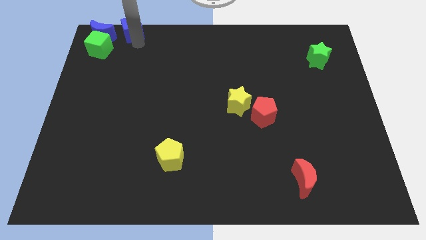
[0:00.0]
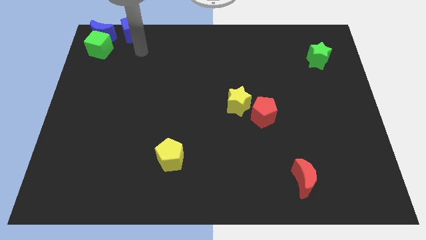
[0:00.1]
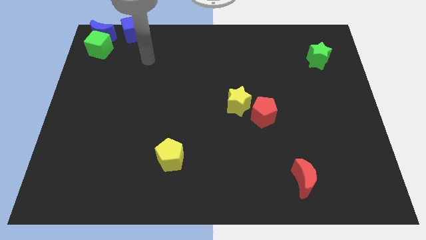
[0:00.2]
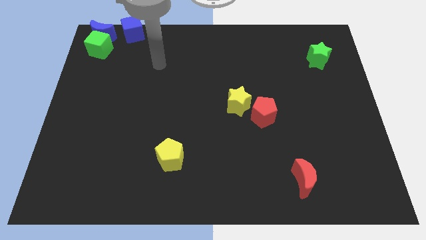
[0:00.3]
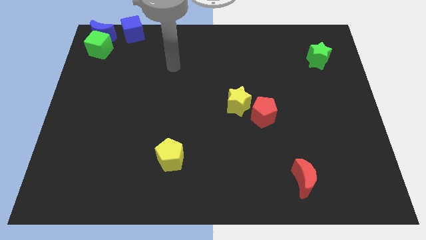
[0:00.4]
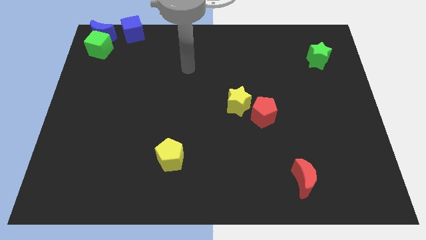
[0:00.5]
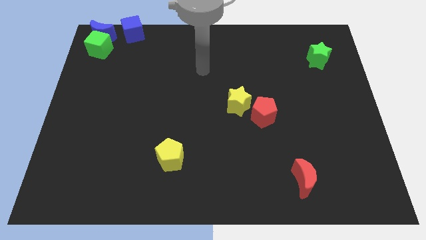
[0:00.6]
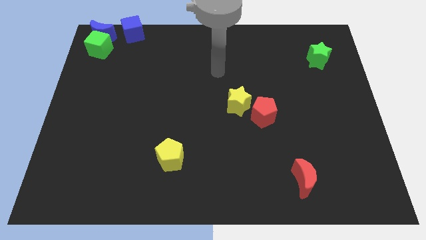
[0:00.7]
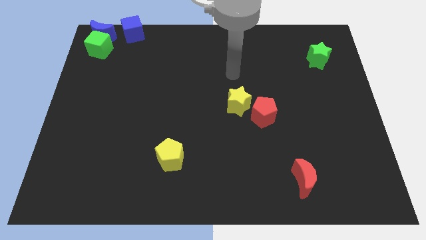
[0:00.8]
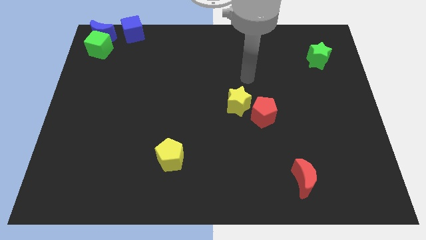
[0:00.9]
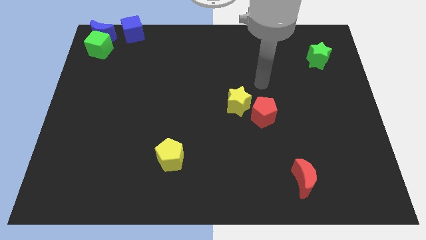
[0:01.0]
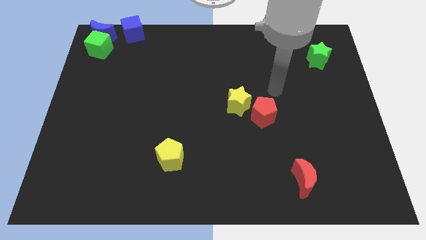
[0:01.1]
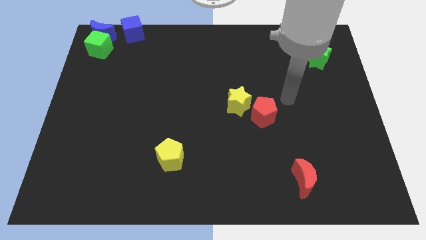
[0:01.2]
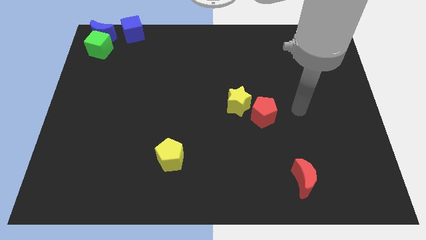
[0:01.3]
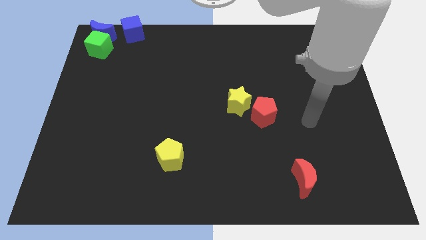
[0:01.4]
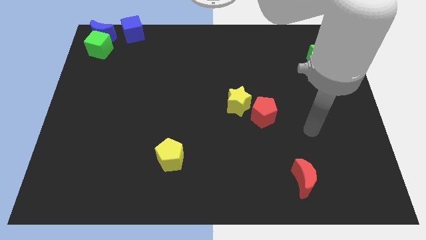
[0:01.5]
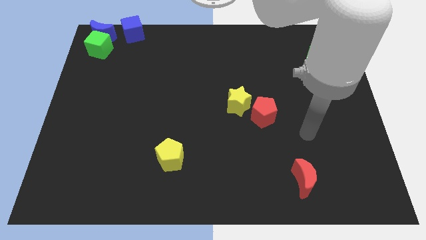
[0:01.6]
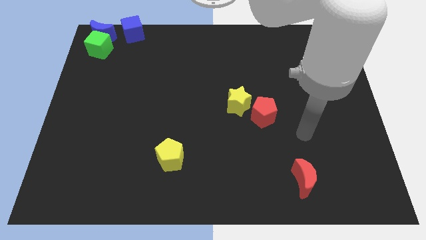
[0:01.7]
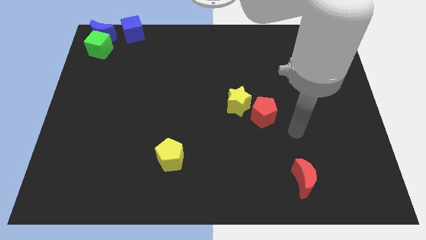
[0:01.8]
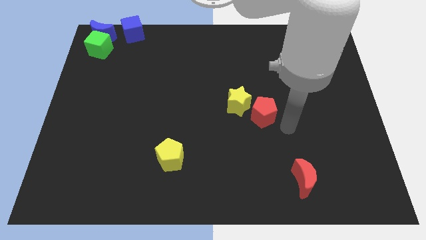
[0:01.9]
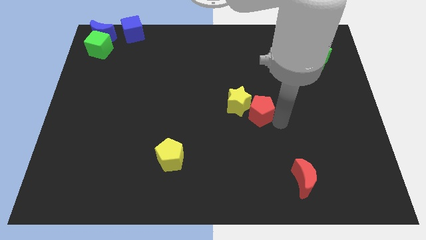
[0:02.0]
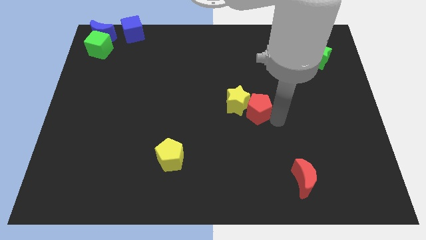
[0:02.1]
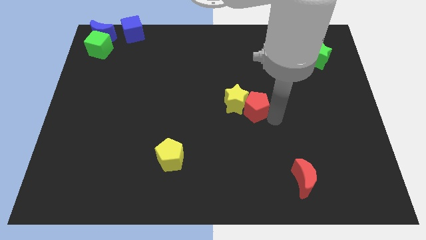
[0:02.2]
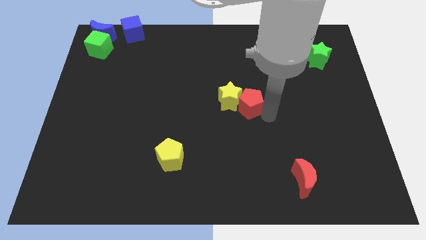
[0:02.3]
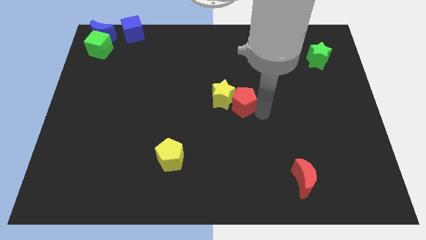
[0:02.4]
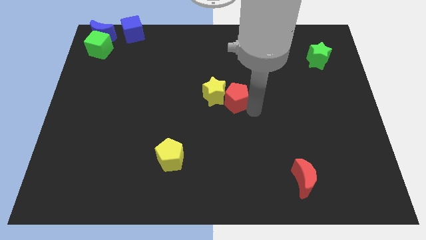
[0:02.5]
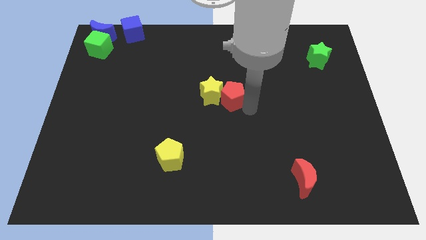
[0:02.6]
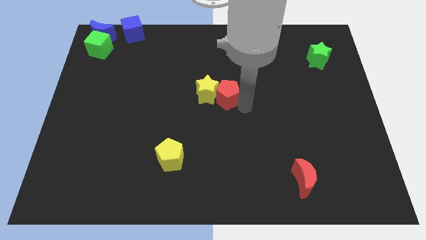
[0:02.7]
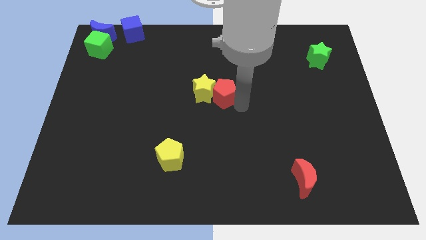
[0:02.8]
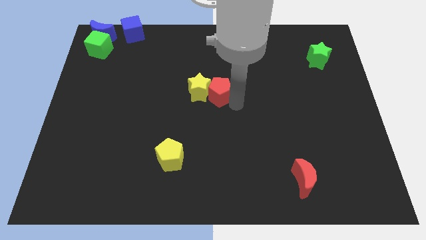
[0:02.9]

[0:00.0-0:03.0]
place red pentagon and yellow star to the center of the board

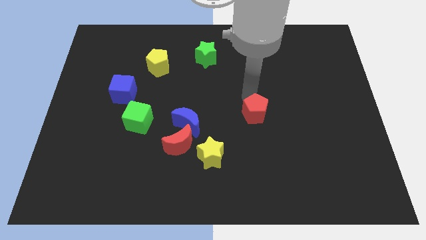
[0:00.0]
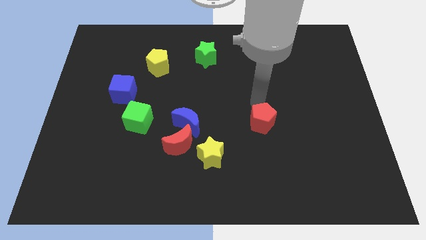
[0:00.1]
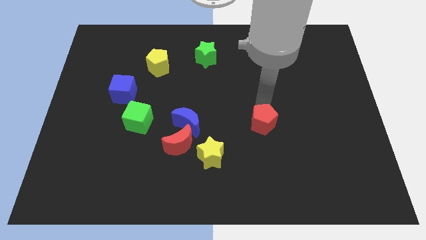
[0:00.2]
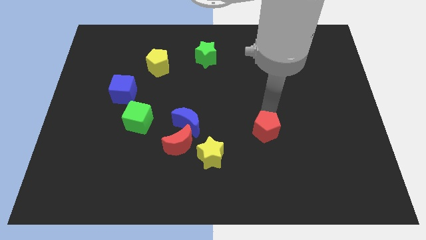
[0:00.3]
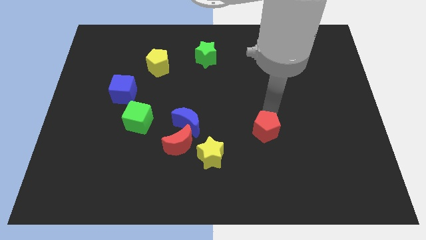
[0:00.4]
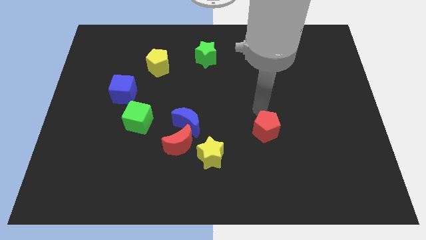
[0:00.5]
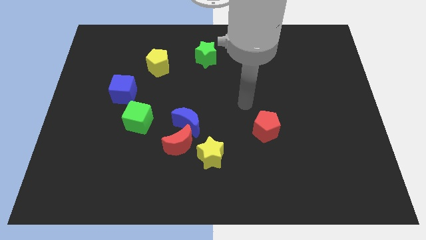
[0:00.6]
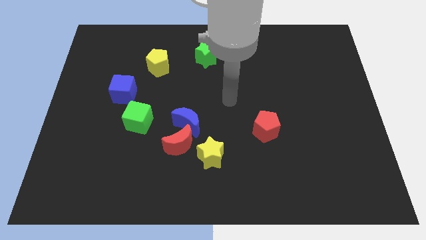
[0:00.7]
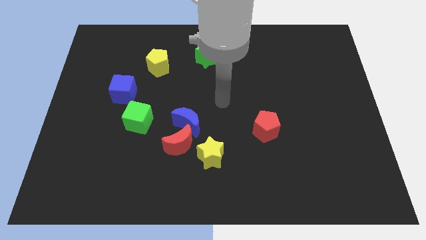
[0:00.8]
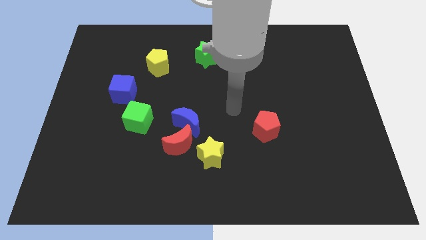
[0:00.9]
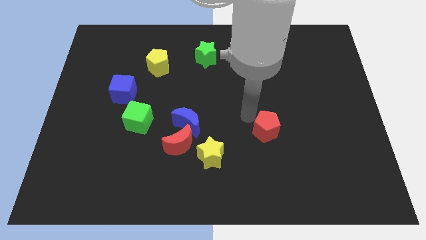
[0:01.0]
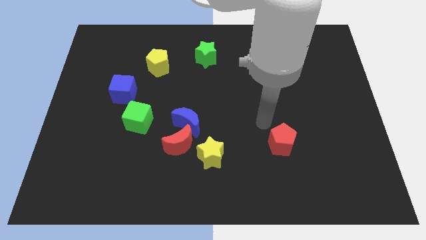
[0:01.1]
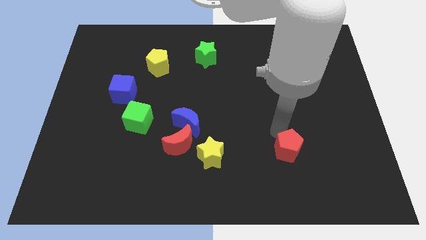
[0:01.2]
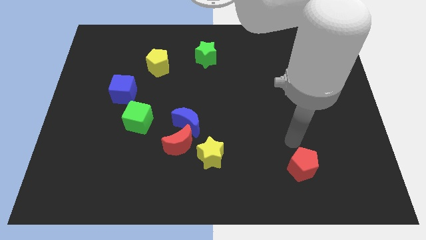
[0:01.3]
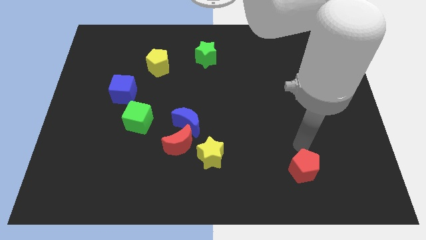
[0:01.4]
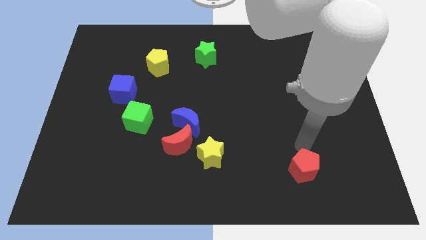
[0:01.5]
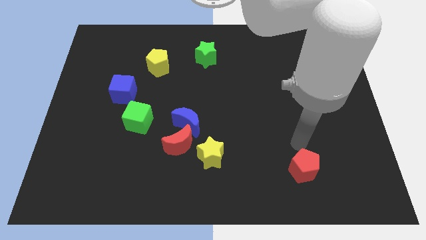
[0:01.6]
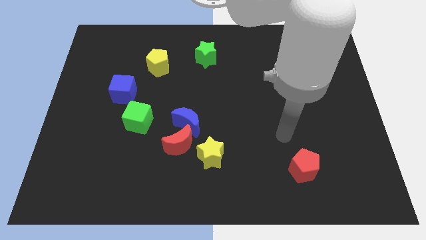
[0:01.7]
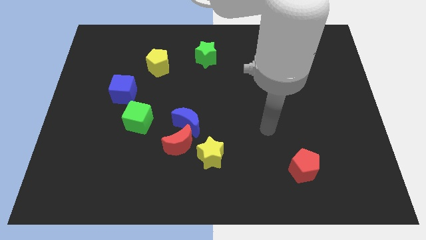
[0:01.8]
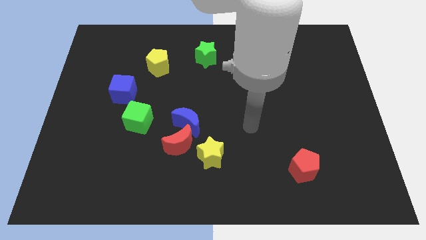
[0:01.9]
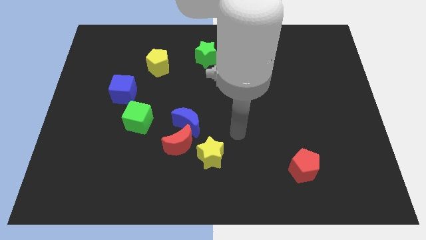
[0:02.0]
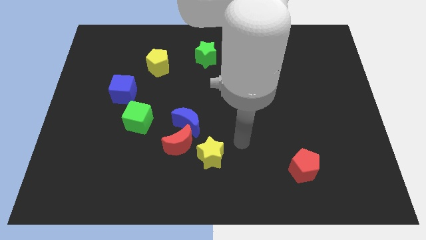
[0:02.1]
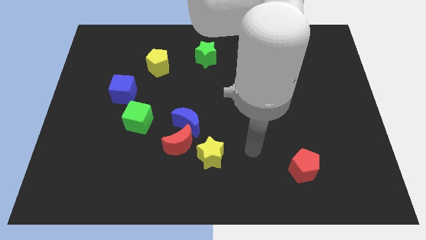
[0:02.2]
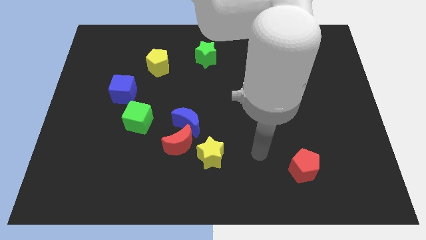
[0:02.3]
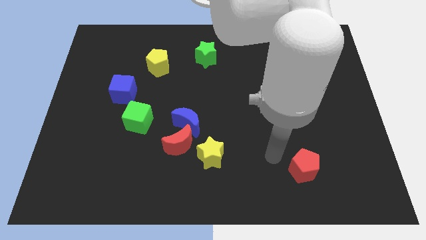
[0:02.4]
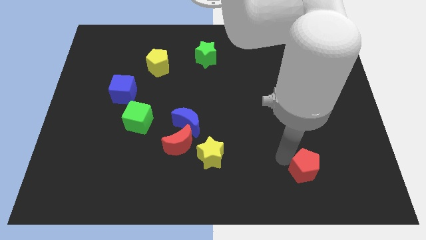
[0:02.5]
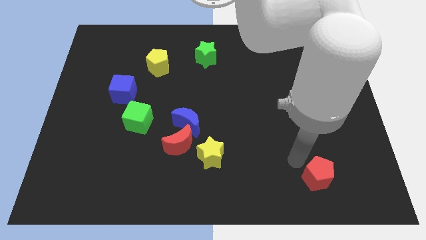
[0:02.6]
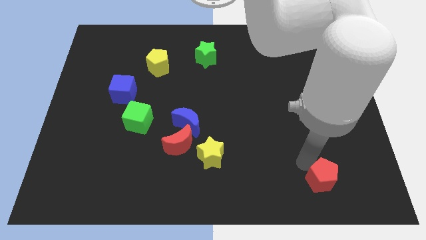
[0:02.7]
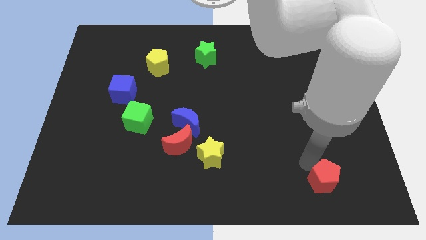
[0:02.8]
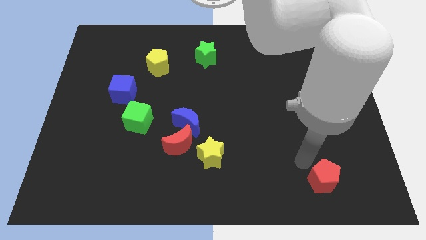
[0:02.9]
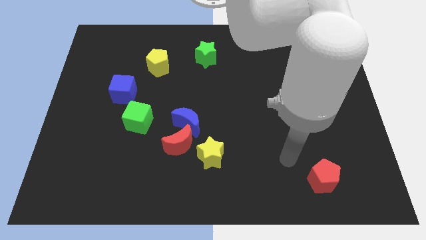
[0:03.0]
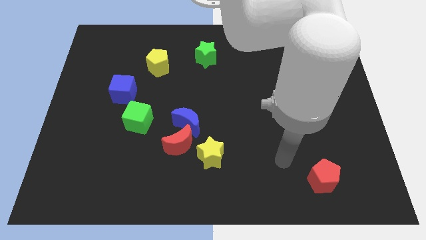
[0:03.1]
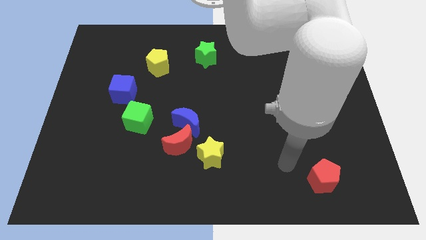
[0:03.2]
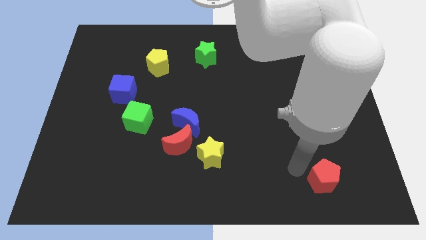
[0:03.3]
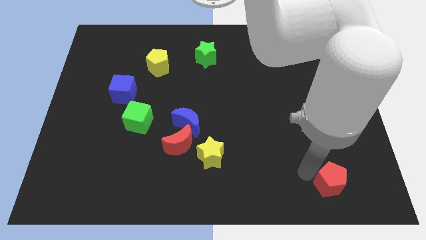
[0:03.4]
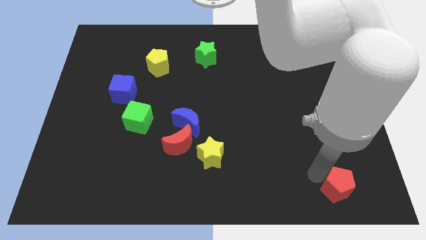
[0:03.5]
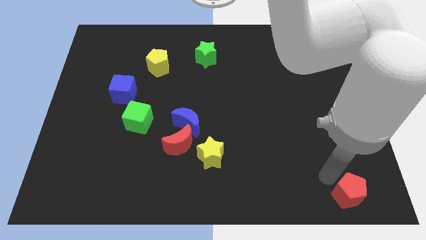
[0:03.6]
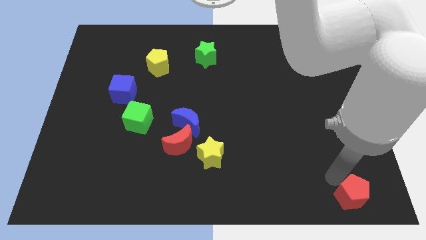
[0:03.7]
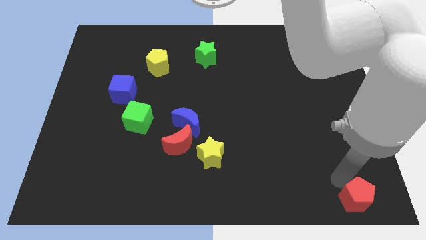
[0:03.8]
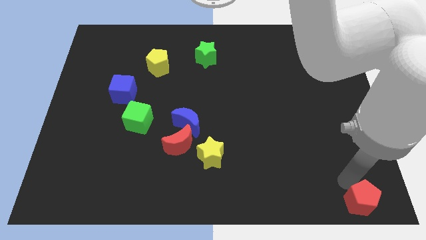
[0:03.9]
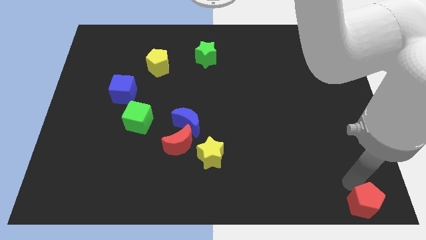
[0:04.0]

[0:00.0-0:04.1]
move red pentagon towards bottom right

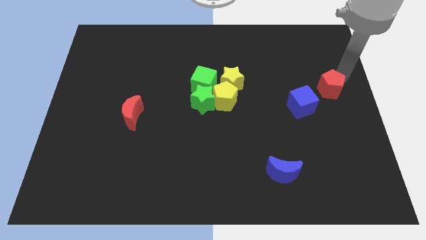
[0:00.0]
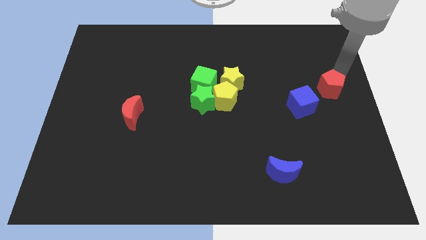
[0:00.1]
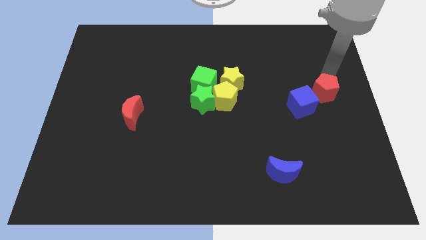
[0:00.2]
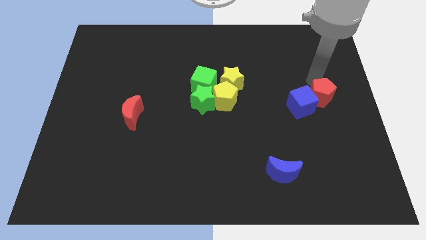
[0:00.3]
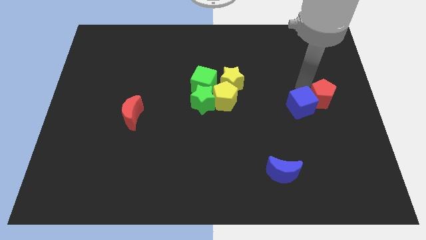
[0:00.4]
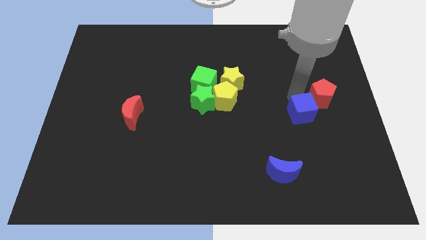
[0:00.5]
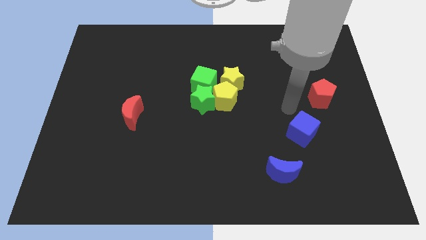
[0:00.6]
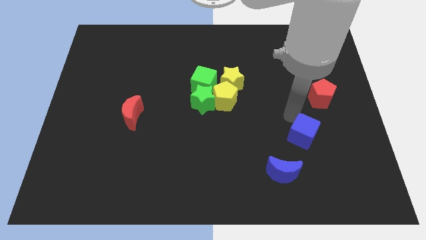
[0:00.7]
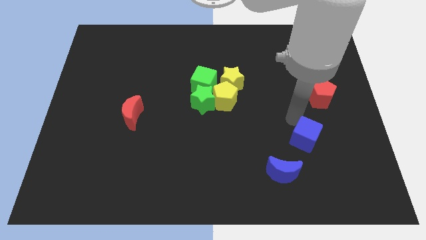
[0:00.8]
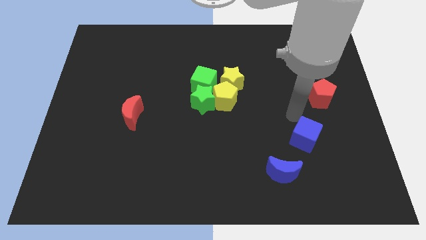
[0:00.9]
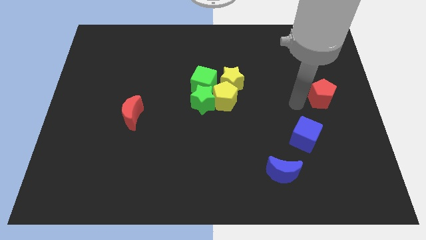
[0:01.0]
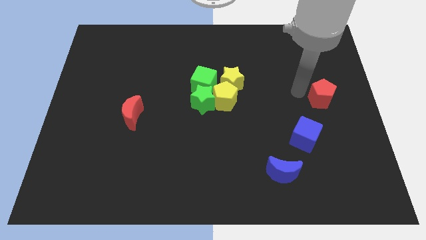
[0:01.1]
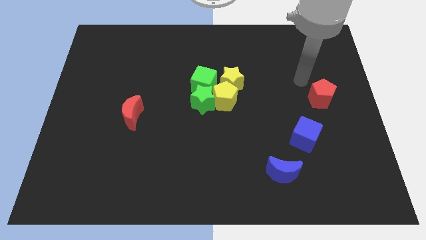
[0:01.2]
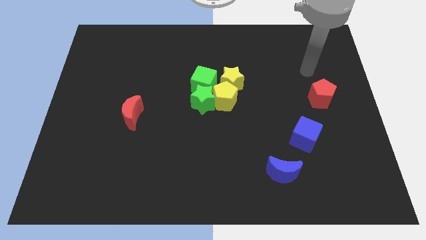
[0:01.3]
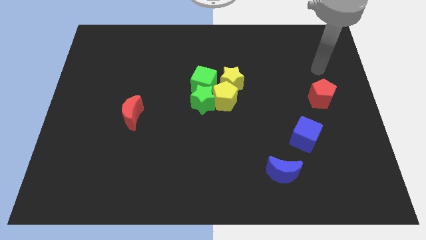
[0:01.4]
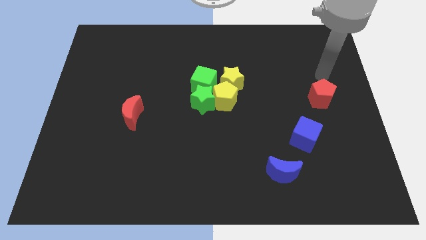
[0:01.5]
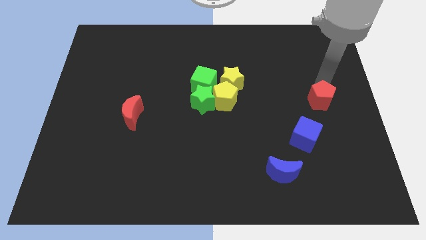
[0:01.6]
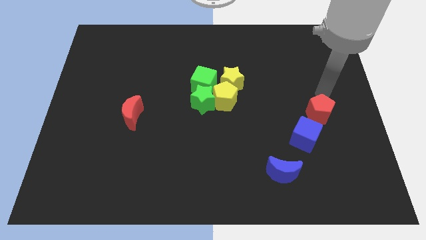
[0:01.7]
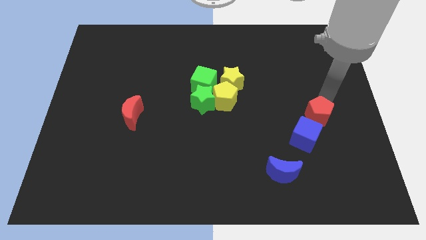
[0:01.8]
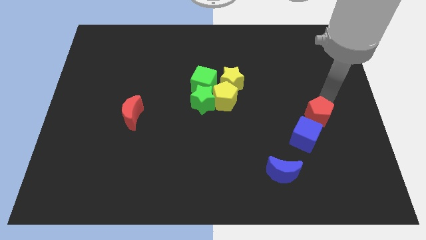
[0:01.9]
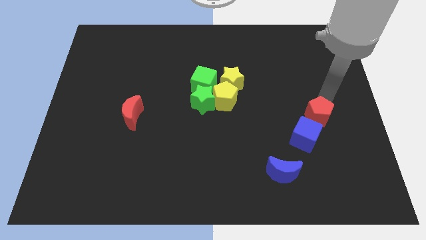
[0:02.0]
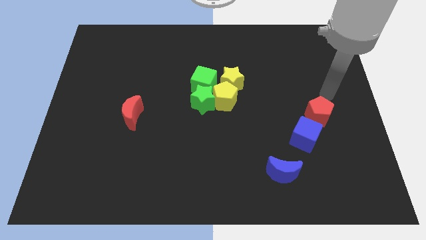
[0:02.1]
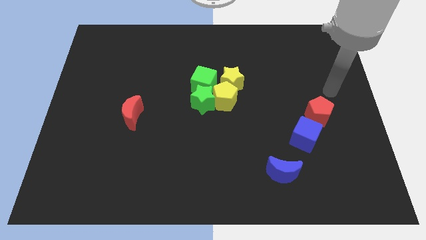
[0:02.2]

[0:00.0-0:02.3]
push the blue cube and red pentagon towards top of blue moon
